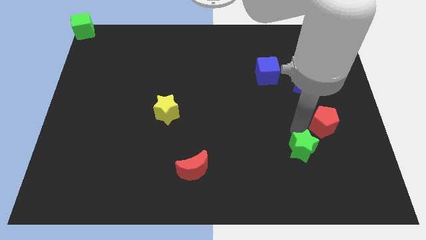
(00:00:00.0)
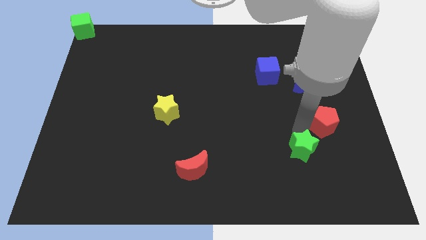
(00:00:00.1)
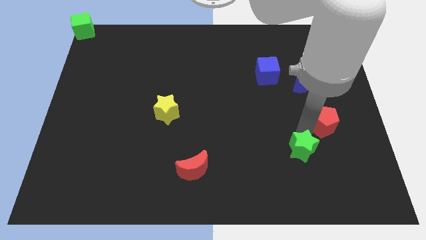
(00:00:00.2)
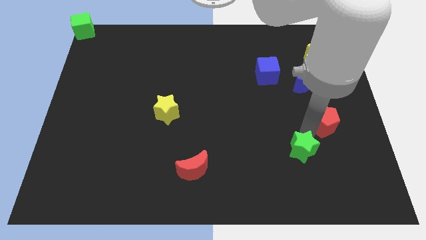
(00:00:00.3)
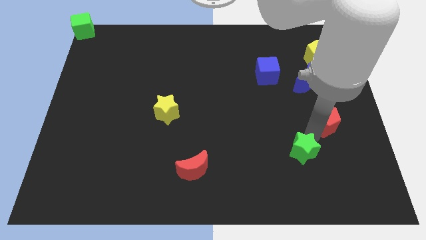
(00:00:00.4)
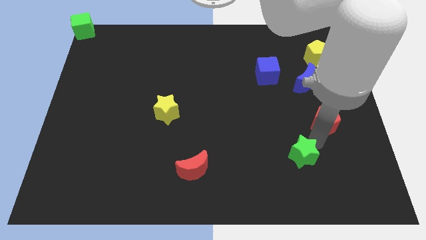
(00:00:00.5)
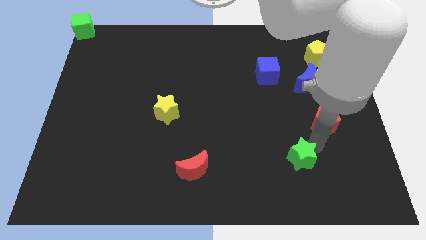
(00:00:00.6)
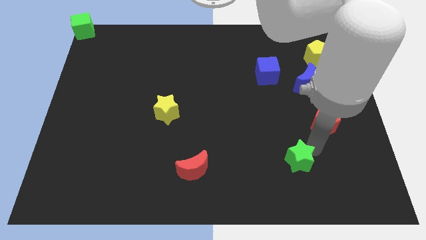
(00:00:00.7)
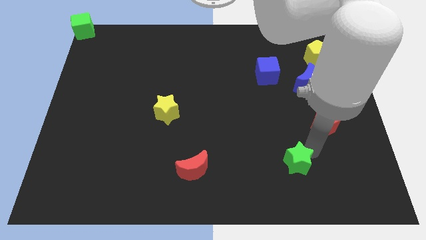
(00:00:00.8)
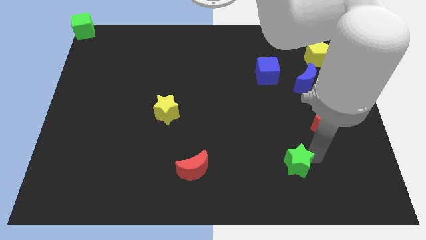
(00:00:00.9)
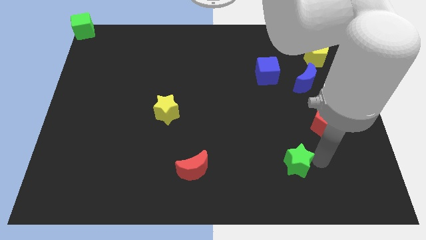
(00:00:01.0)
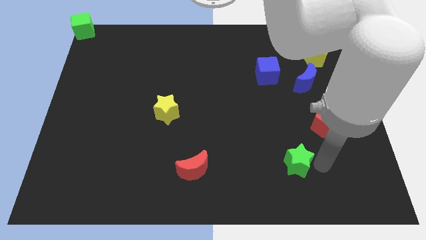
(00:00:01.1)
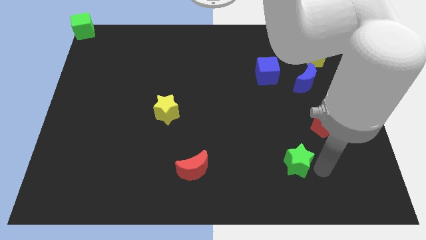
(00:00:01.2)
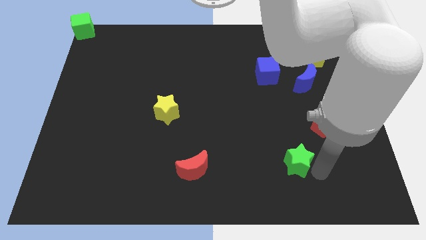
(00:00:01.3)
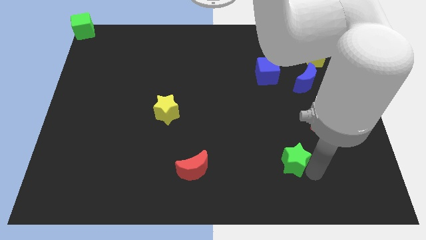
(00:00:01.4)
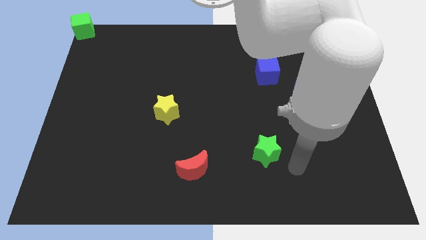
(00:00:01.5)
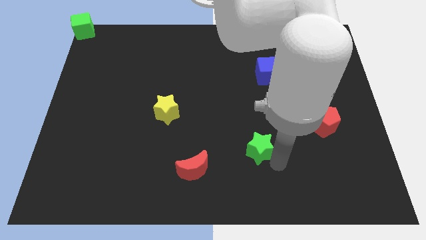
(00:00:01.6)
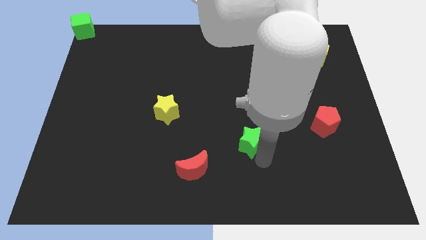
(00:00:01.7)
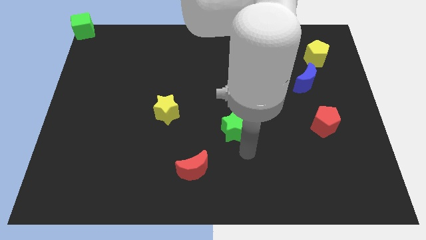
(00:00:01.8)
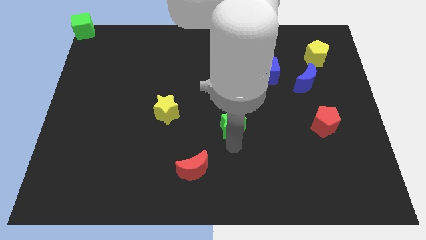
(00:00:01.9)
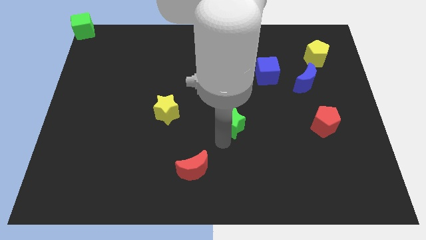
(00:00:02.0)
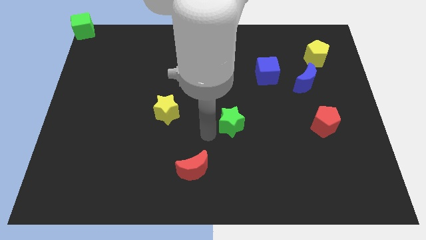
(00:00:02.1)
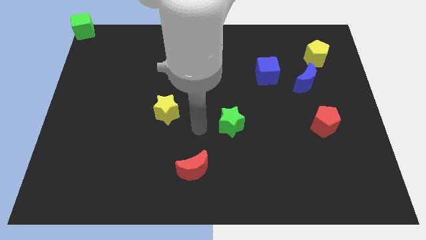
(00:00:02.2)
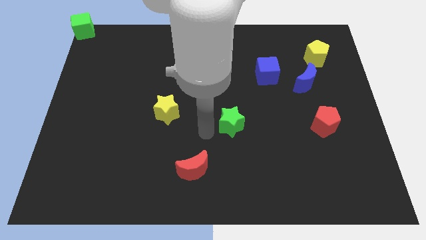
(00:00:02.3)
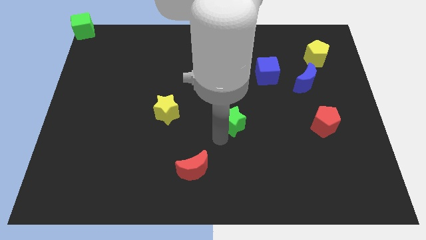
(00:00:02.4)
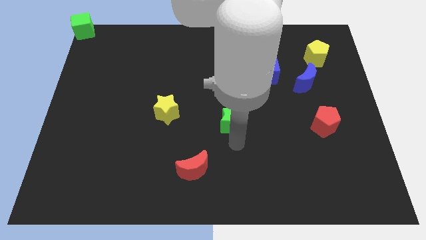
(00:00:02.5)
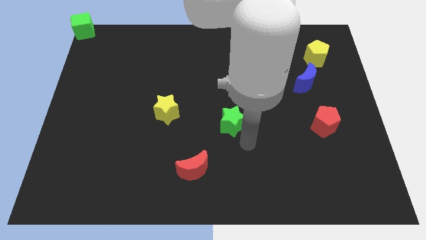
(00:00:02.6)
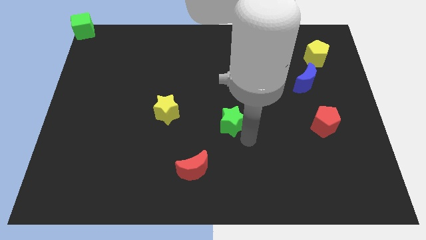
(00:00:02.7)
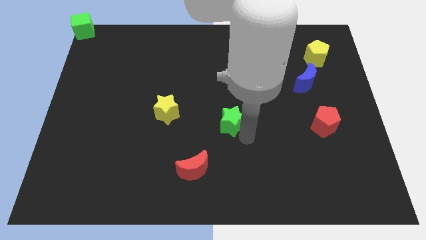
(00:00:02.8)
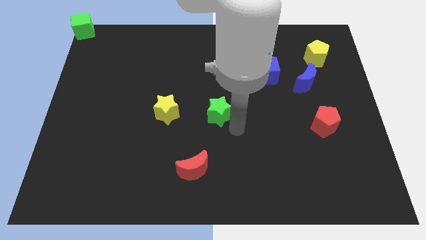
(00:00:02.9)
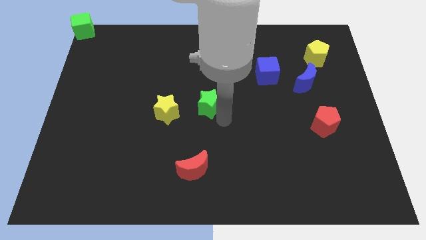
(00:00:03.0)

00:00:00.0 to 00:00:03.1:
push the green star towards the center of the board

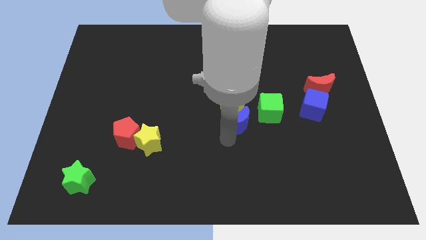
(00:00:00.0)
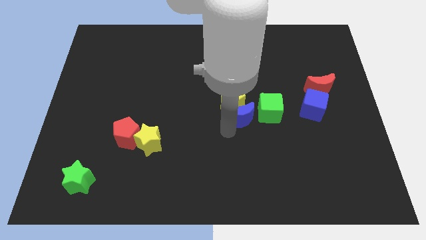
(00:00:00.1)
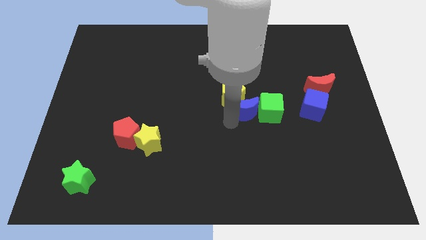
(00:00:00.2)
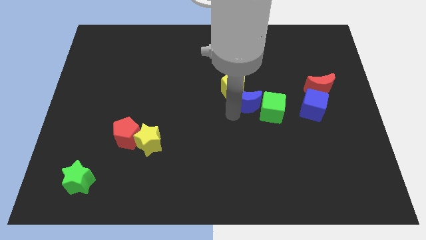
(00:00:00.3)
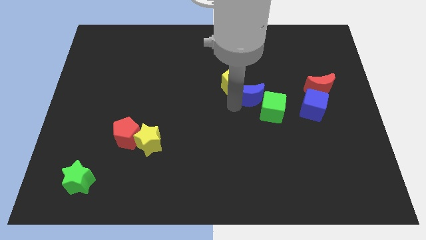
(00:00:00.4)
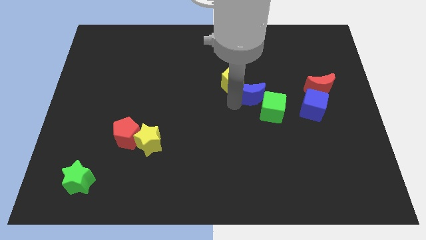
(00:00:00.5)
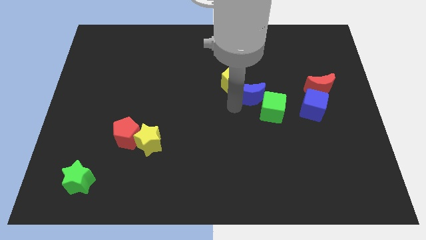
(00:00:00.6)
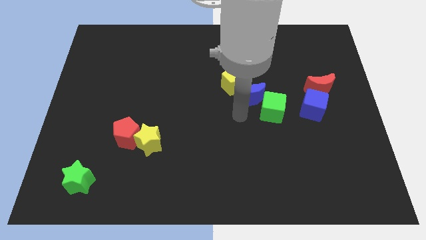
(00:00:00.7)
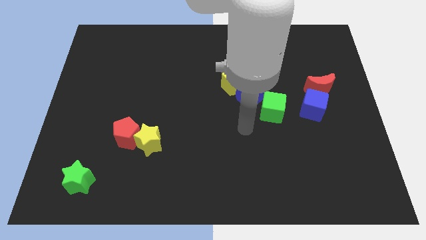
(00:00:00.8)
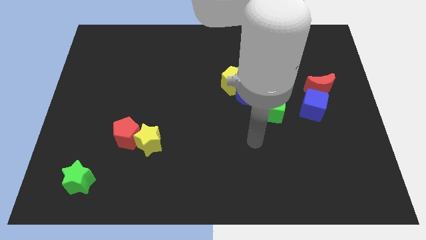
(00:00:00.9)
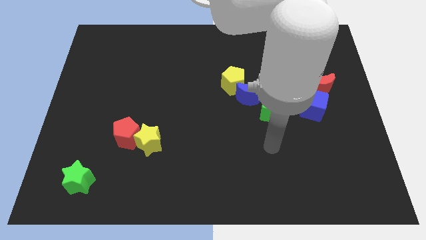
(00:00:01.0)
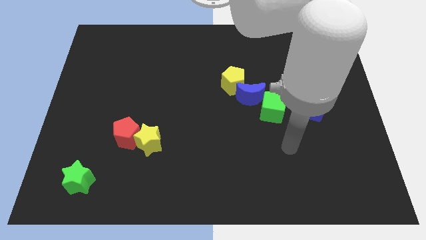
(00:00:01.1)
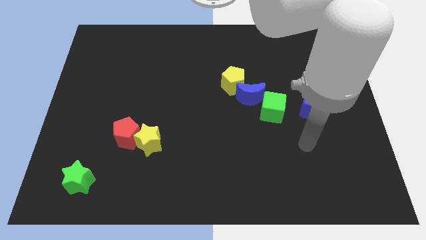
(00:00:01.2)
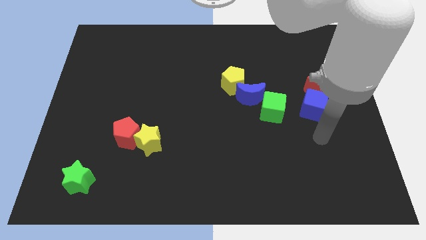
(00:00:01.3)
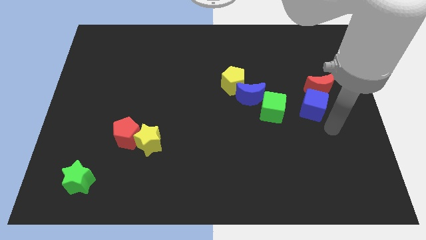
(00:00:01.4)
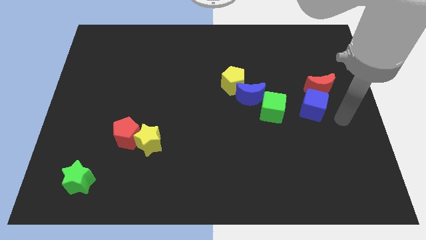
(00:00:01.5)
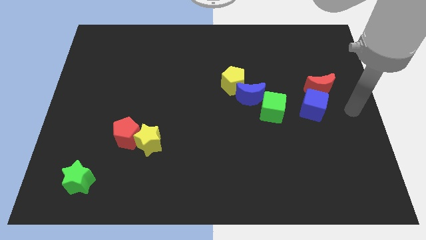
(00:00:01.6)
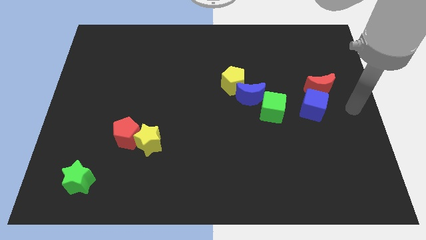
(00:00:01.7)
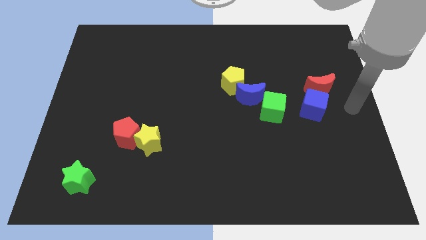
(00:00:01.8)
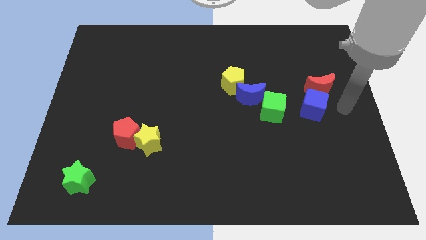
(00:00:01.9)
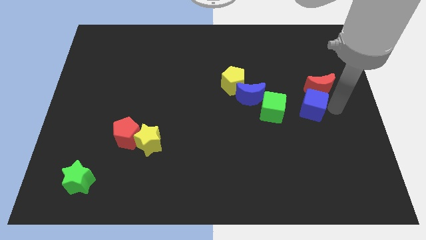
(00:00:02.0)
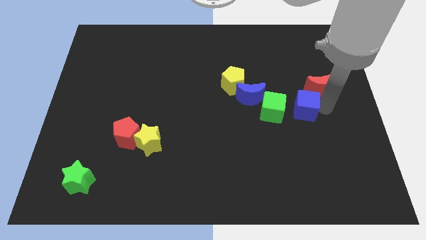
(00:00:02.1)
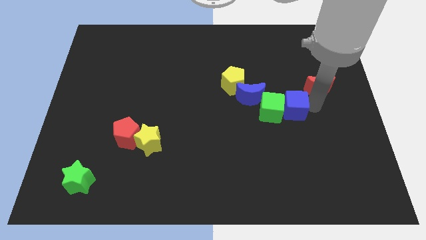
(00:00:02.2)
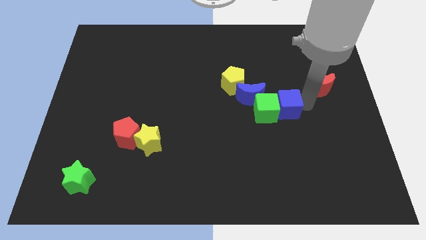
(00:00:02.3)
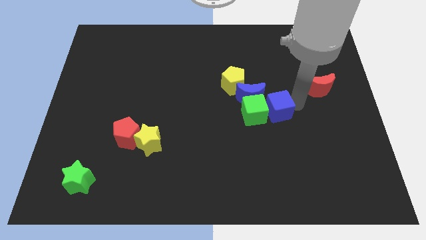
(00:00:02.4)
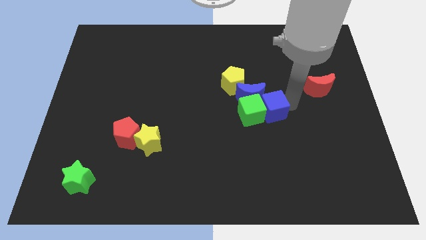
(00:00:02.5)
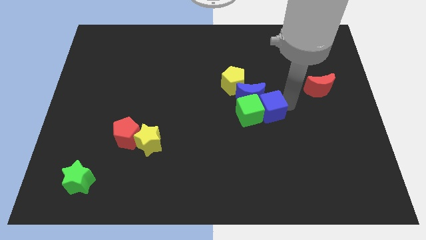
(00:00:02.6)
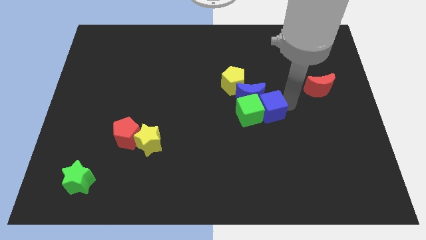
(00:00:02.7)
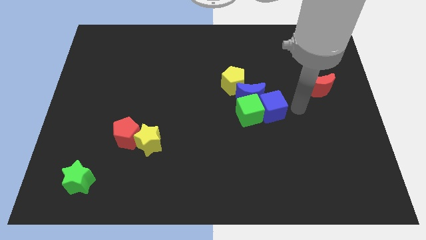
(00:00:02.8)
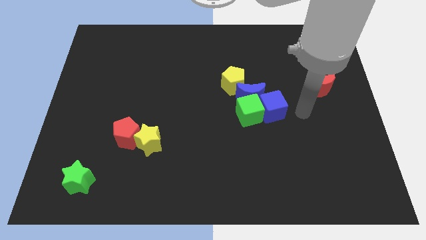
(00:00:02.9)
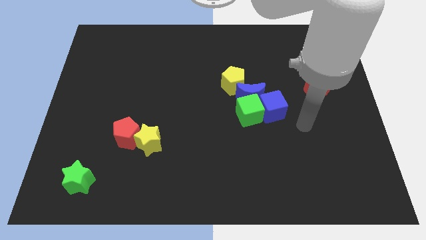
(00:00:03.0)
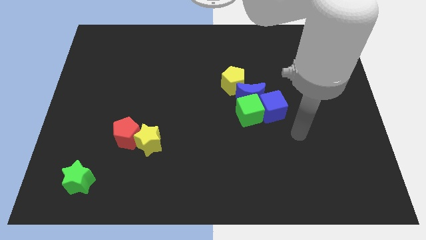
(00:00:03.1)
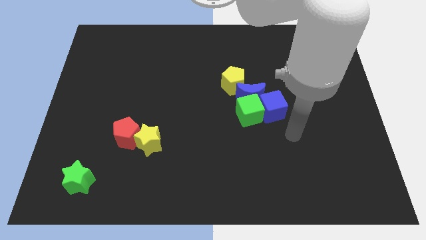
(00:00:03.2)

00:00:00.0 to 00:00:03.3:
move blue cube close to green cube

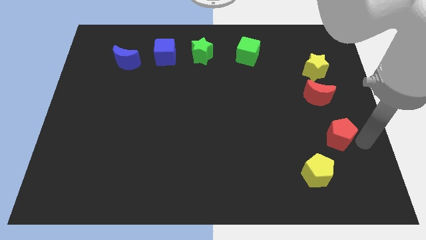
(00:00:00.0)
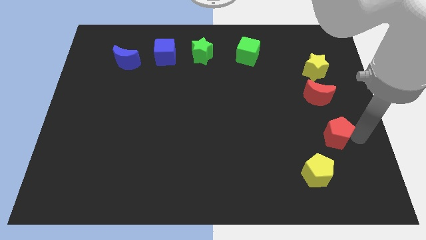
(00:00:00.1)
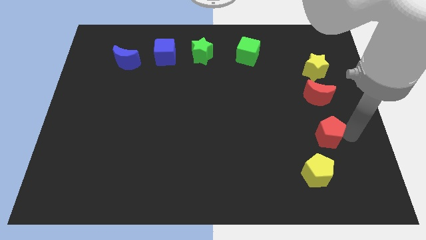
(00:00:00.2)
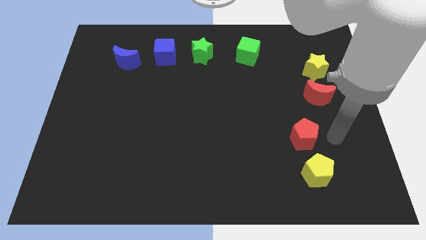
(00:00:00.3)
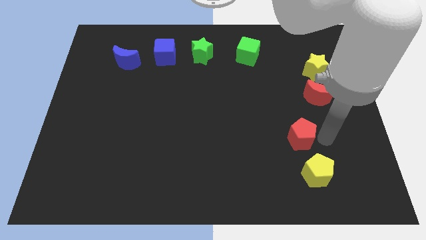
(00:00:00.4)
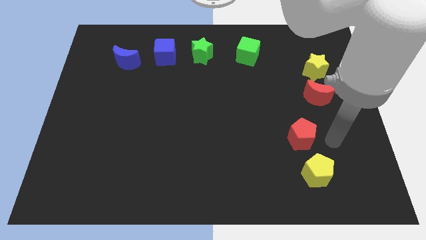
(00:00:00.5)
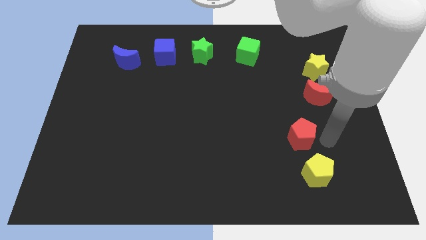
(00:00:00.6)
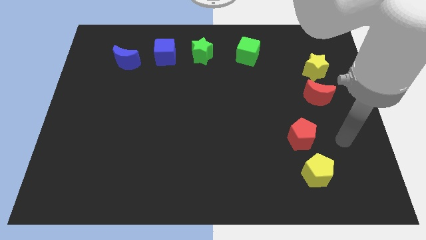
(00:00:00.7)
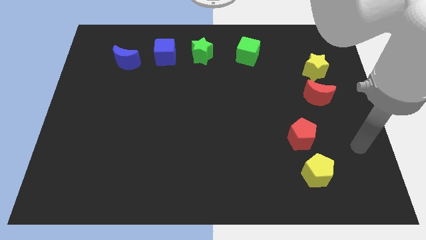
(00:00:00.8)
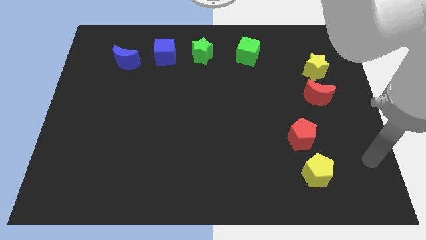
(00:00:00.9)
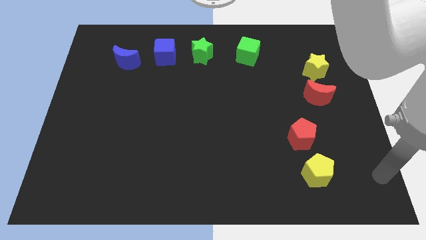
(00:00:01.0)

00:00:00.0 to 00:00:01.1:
slightly move the red pentagon to the left

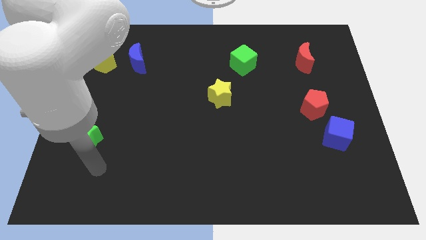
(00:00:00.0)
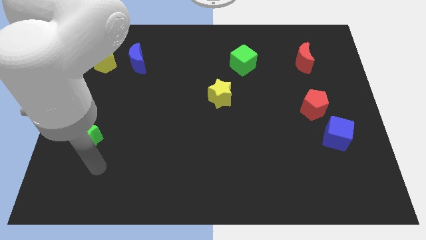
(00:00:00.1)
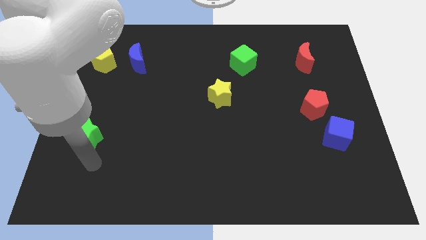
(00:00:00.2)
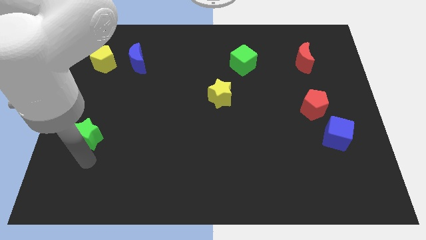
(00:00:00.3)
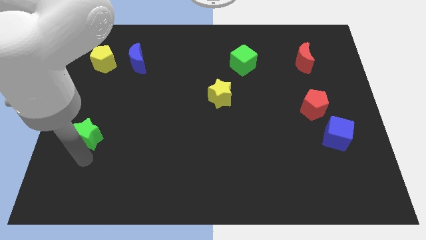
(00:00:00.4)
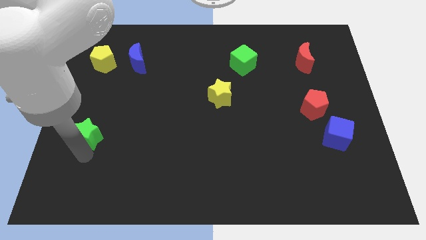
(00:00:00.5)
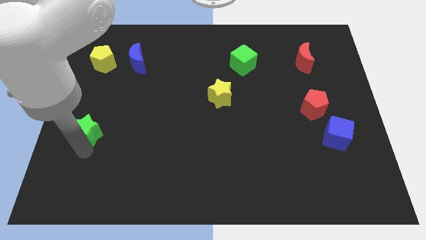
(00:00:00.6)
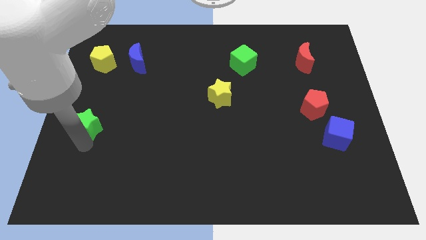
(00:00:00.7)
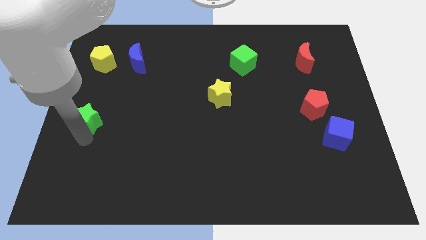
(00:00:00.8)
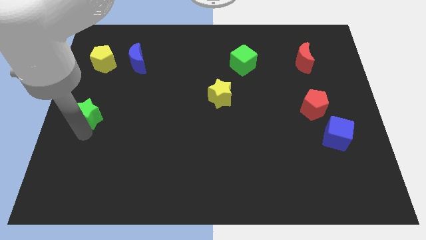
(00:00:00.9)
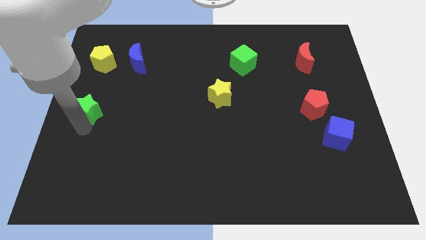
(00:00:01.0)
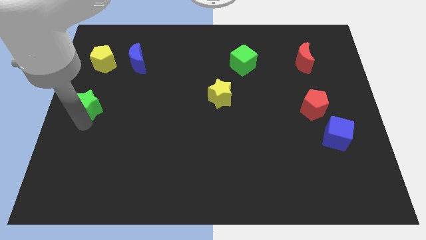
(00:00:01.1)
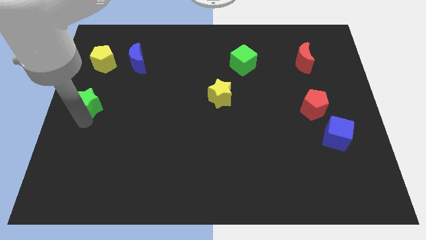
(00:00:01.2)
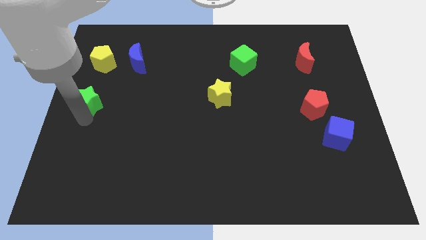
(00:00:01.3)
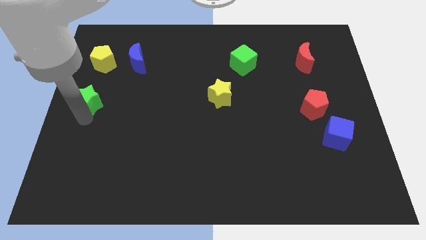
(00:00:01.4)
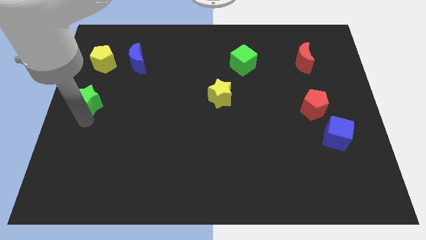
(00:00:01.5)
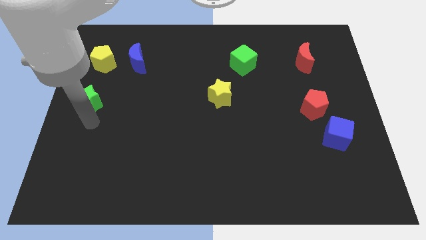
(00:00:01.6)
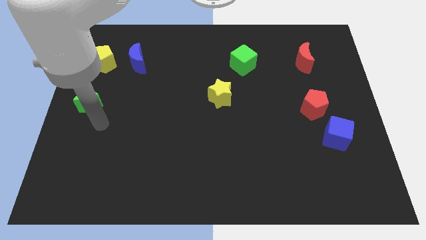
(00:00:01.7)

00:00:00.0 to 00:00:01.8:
push the green star closer to the yellow pentagon
